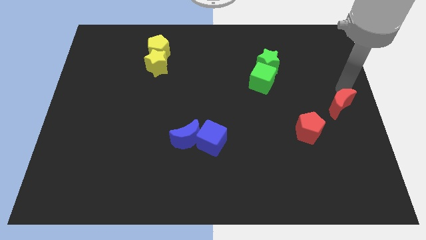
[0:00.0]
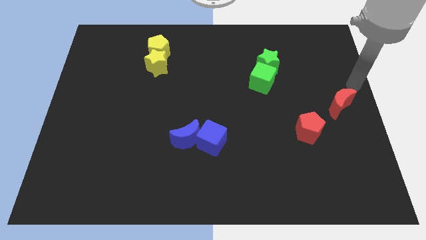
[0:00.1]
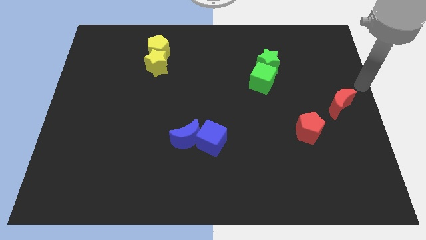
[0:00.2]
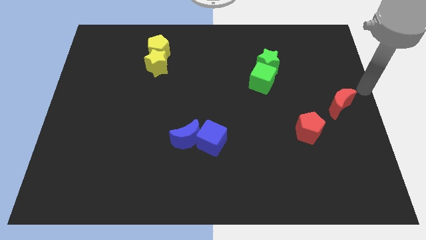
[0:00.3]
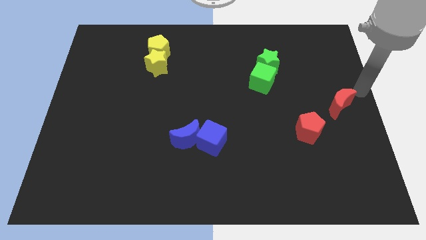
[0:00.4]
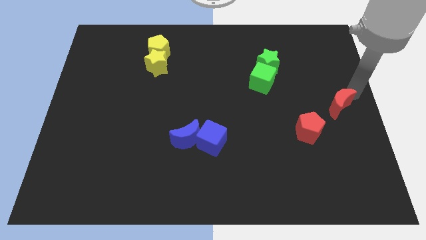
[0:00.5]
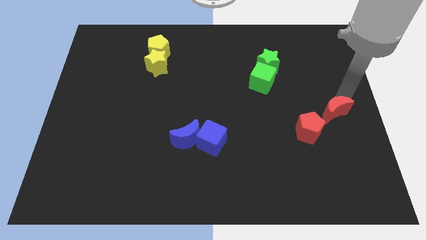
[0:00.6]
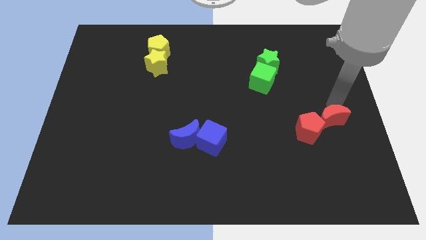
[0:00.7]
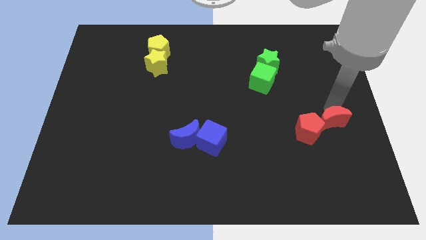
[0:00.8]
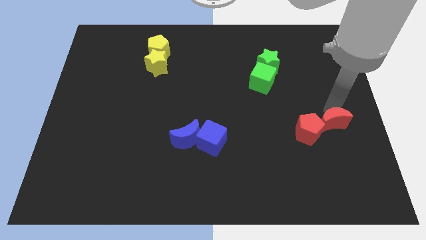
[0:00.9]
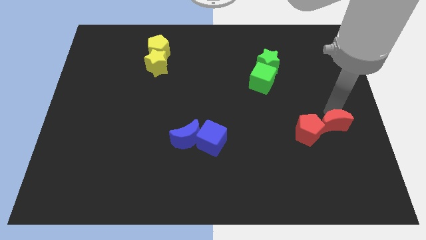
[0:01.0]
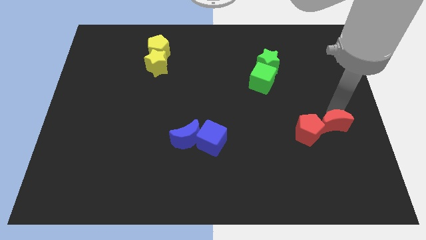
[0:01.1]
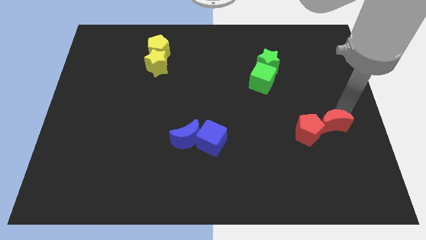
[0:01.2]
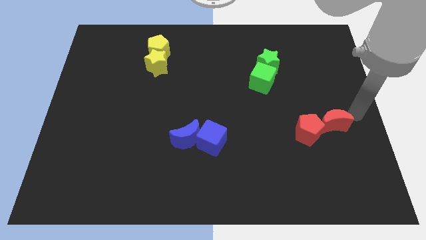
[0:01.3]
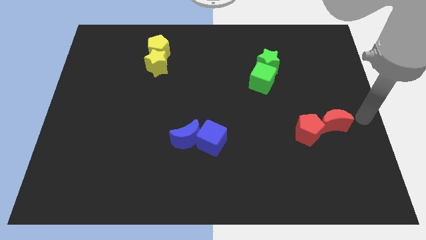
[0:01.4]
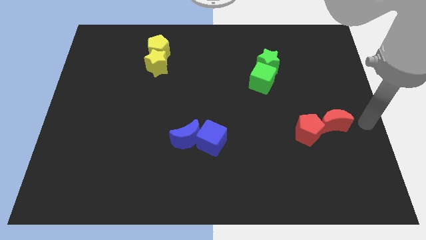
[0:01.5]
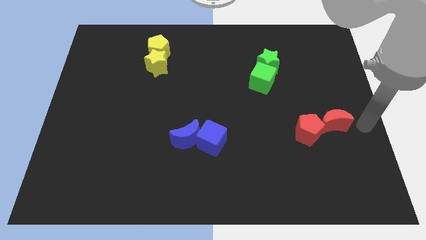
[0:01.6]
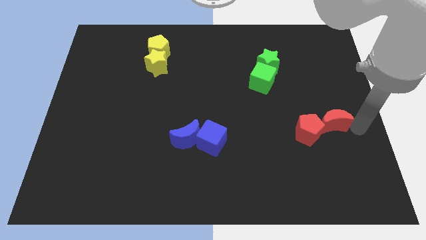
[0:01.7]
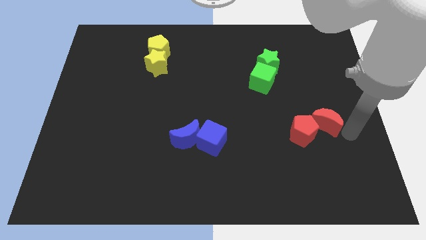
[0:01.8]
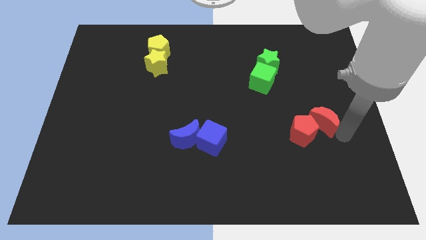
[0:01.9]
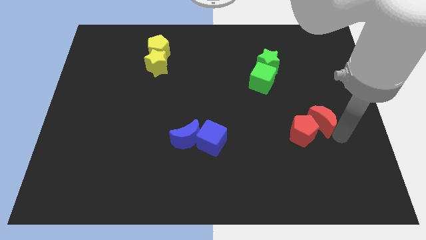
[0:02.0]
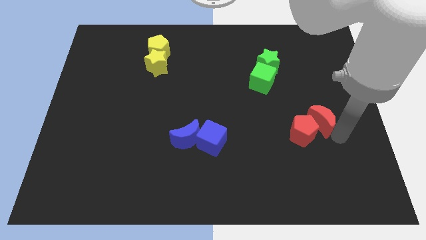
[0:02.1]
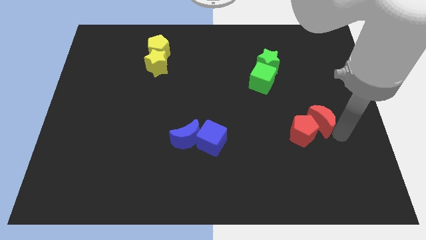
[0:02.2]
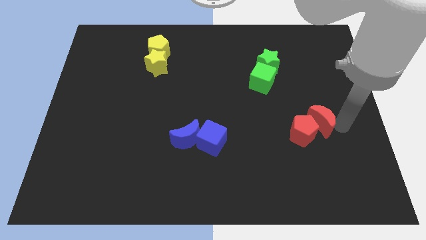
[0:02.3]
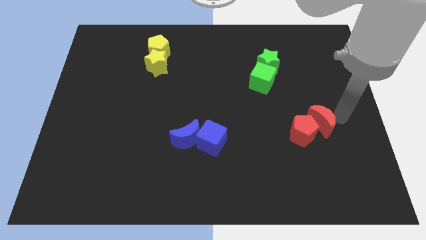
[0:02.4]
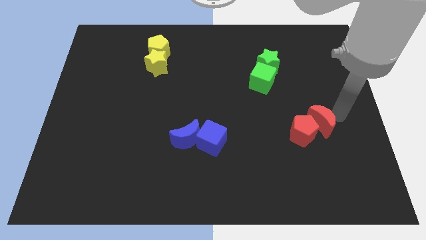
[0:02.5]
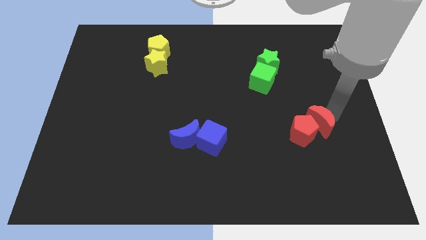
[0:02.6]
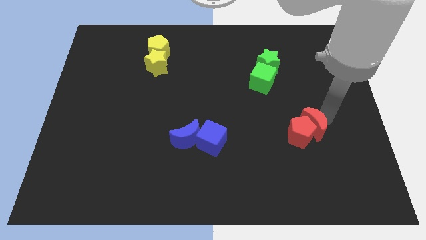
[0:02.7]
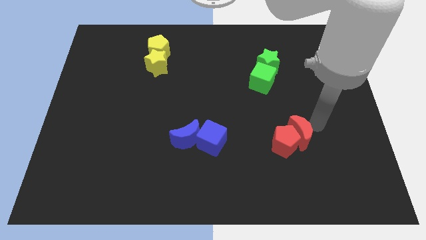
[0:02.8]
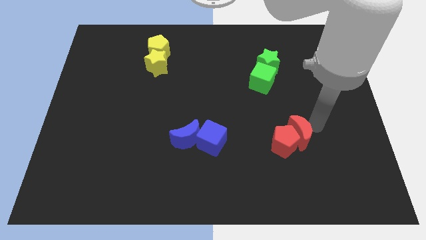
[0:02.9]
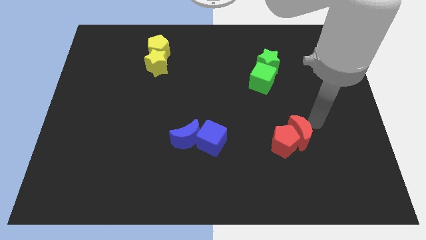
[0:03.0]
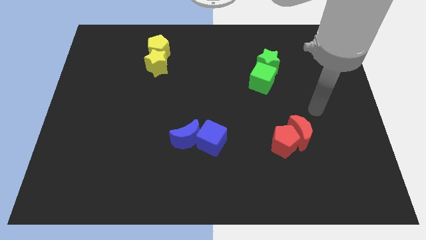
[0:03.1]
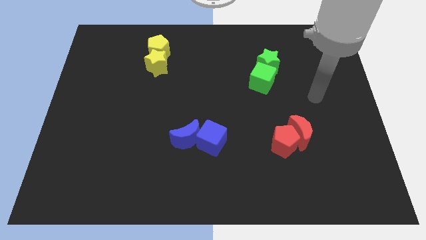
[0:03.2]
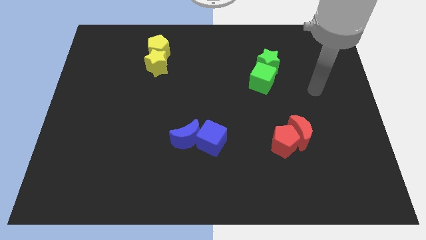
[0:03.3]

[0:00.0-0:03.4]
push the red crescent into the red pentagon

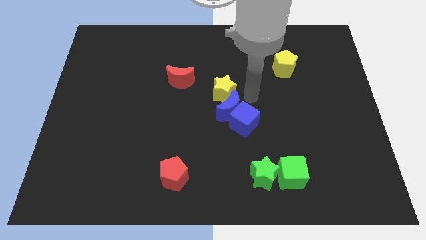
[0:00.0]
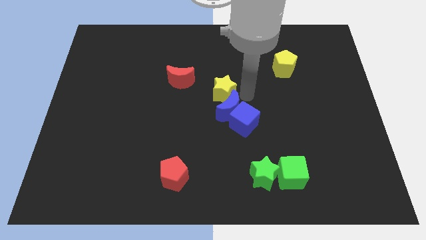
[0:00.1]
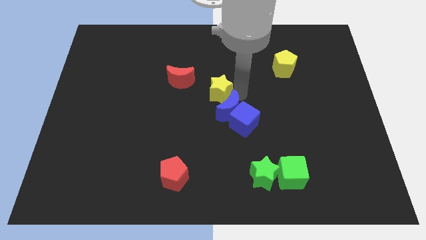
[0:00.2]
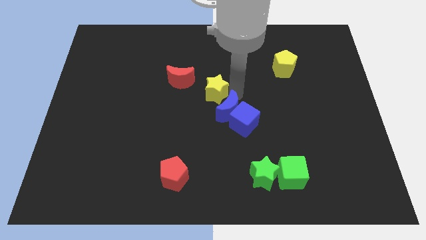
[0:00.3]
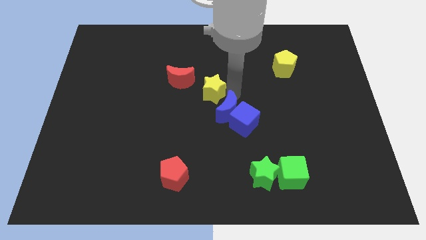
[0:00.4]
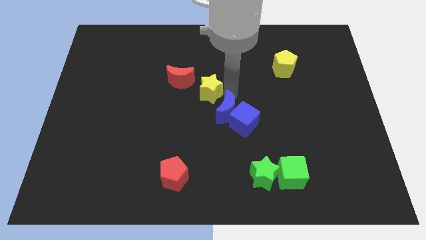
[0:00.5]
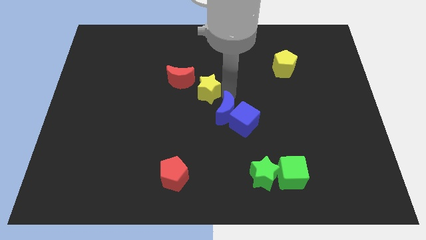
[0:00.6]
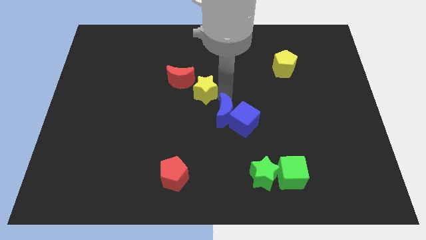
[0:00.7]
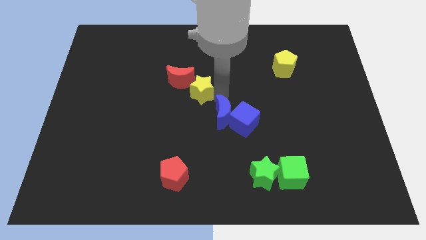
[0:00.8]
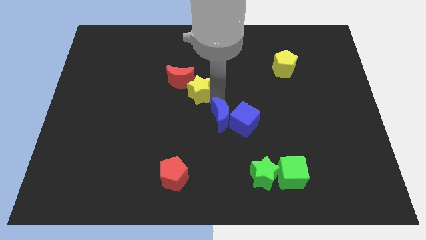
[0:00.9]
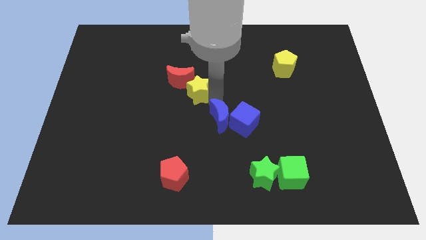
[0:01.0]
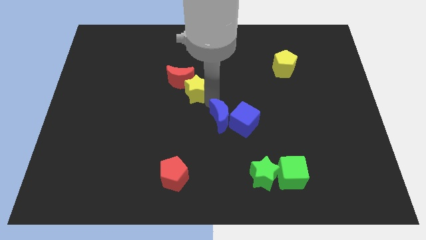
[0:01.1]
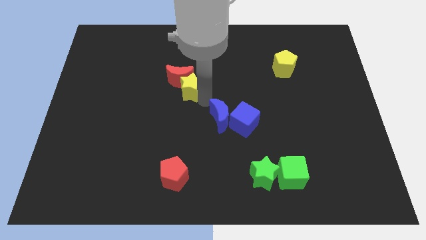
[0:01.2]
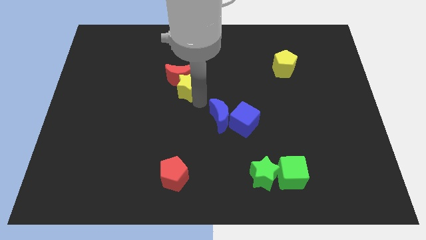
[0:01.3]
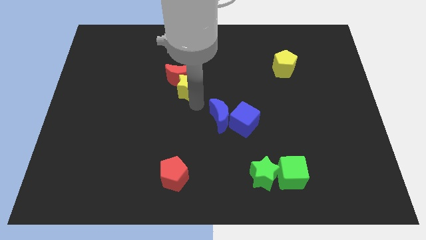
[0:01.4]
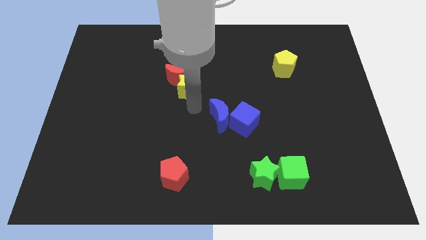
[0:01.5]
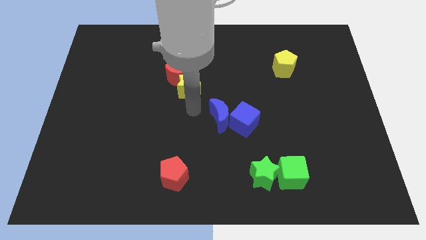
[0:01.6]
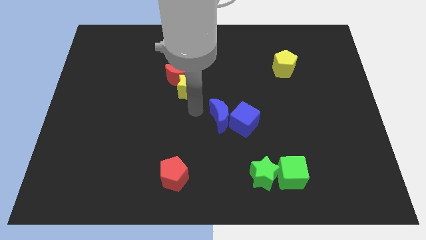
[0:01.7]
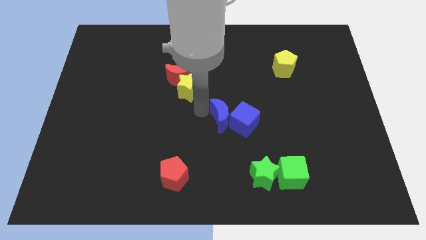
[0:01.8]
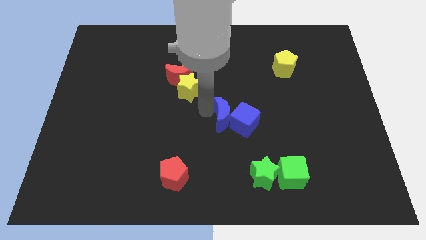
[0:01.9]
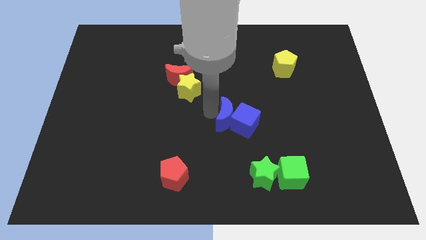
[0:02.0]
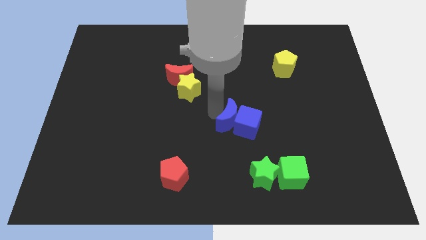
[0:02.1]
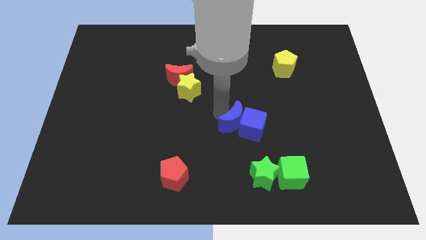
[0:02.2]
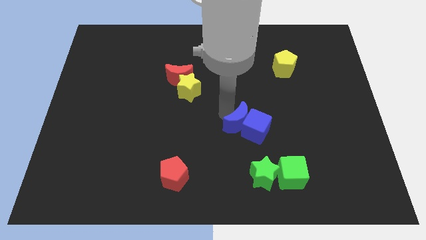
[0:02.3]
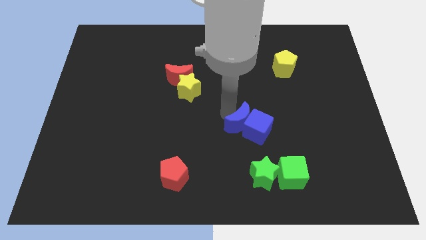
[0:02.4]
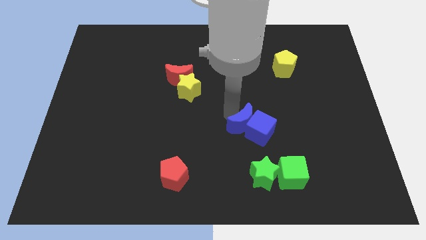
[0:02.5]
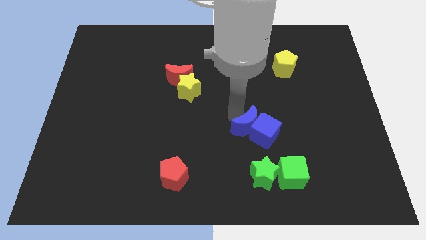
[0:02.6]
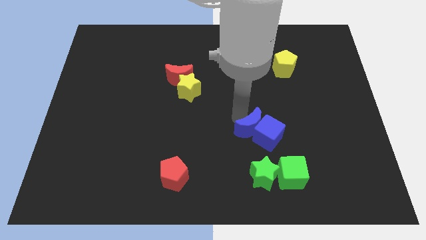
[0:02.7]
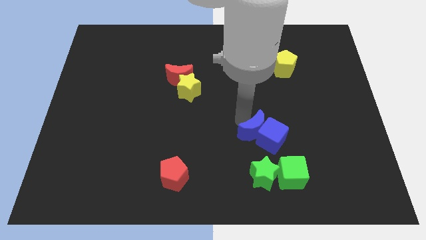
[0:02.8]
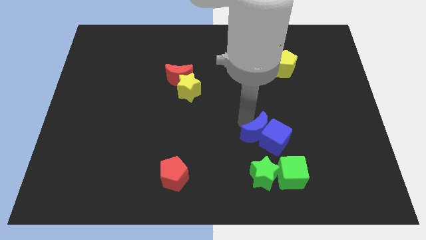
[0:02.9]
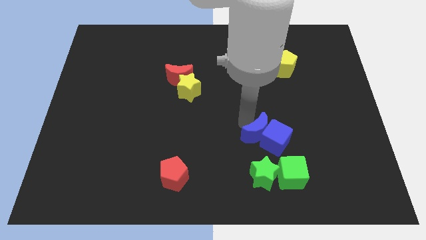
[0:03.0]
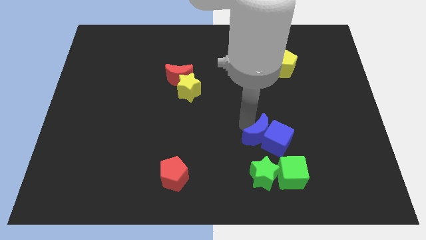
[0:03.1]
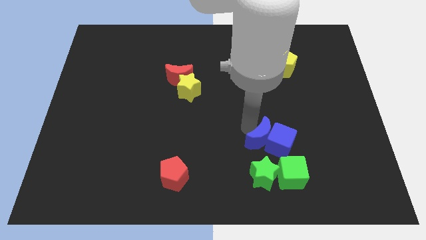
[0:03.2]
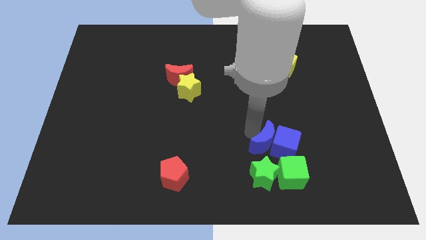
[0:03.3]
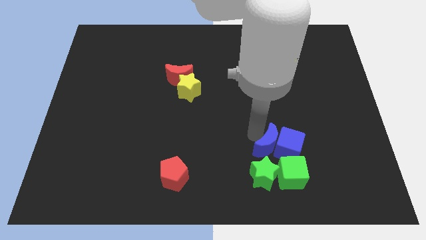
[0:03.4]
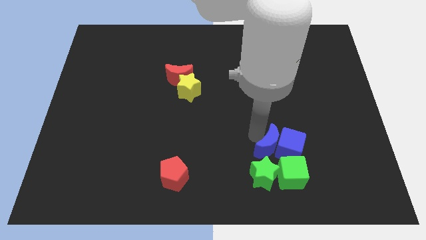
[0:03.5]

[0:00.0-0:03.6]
separate the yellow star and blue blocks from each other

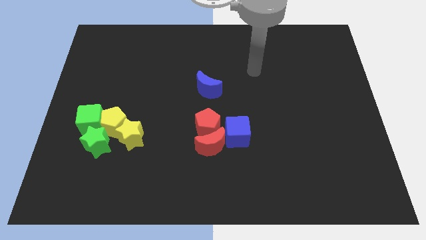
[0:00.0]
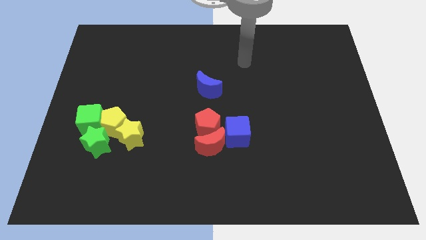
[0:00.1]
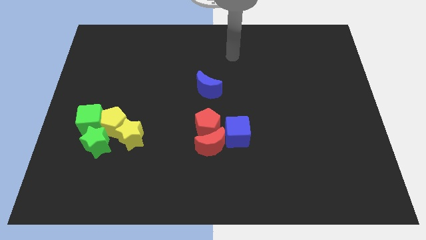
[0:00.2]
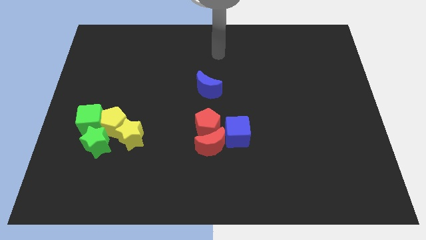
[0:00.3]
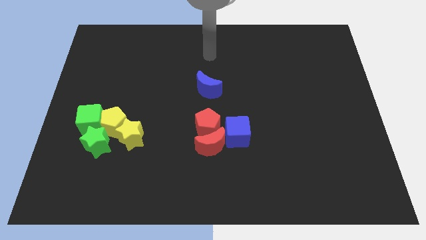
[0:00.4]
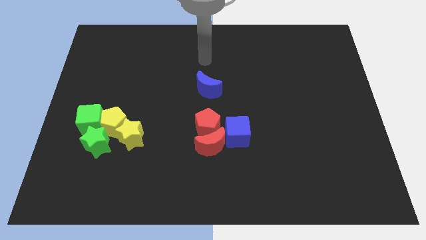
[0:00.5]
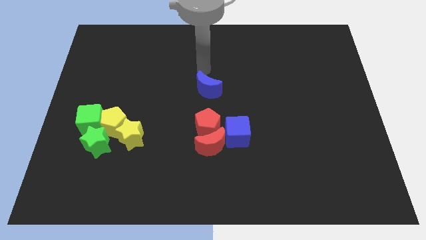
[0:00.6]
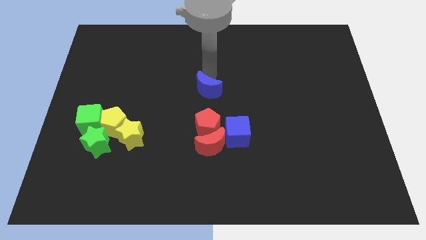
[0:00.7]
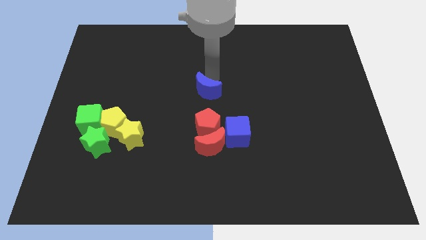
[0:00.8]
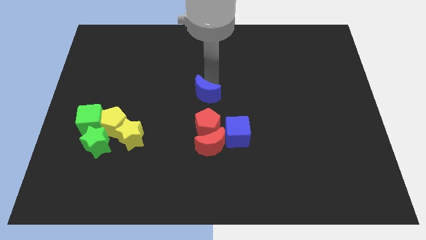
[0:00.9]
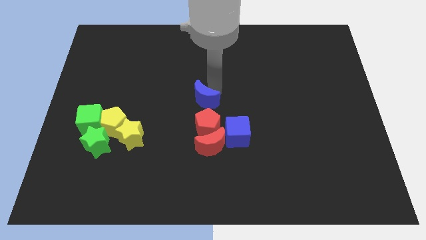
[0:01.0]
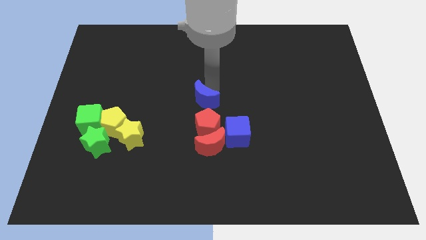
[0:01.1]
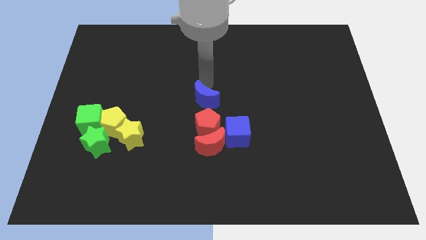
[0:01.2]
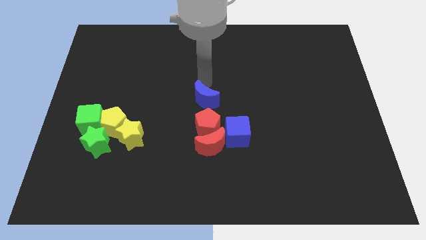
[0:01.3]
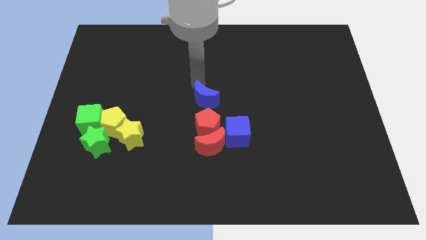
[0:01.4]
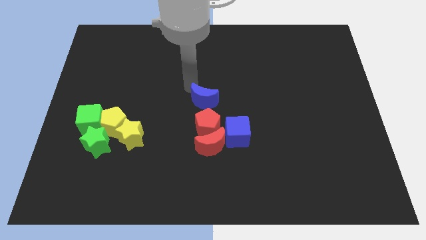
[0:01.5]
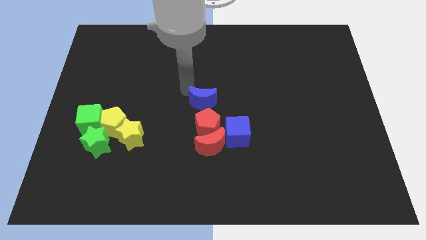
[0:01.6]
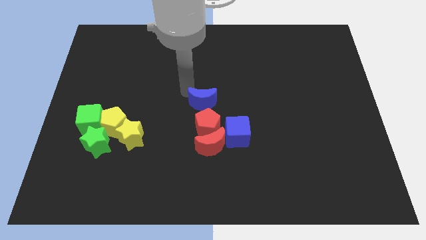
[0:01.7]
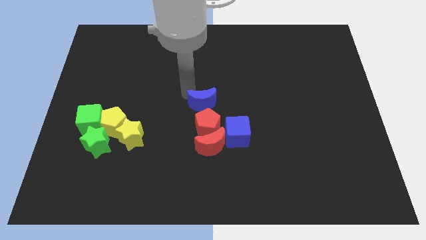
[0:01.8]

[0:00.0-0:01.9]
push the blue cube into the red moon
